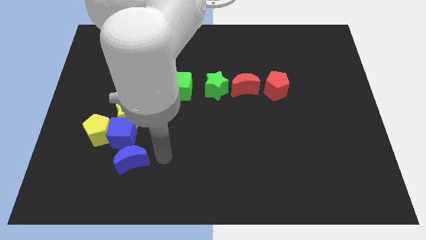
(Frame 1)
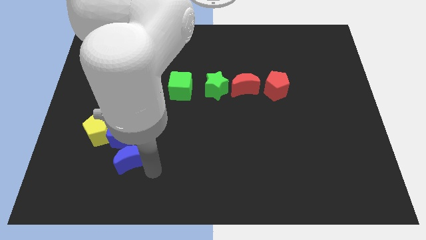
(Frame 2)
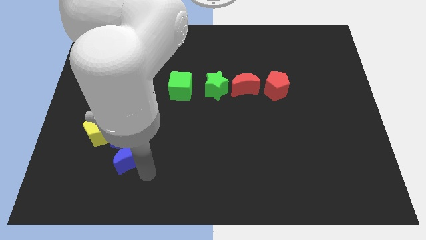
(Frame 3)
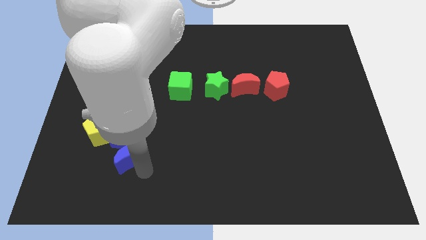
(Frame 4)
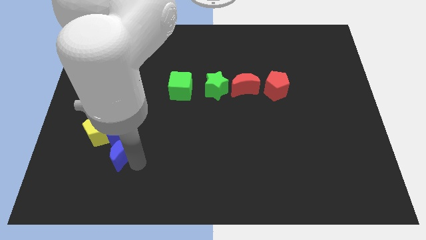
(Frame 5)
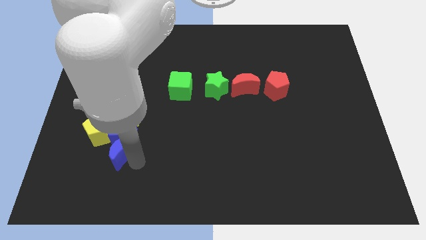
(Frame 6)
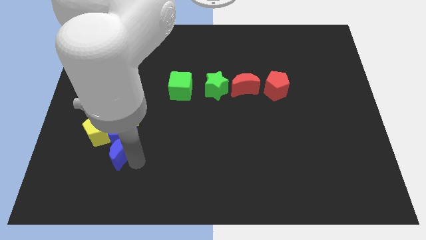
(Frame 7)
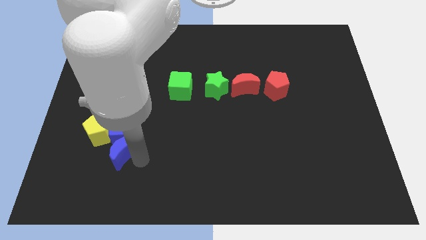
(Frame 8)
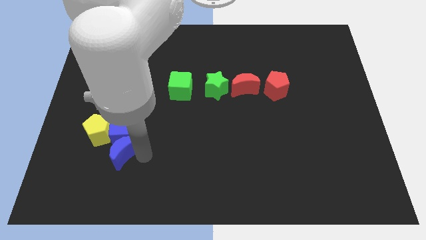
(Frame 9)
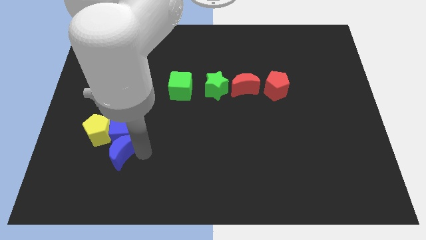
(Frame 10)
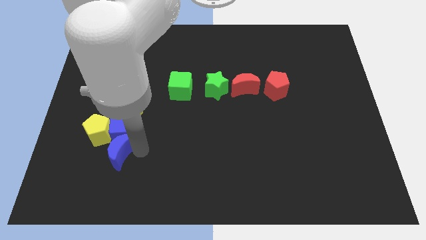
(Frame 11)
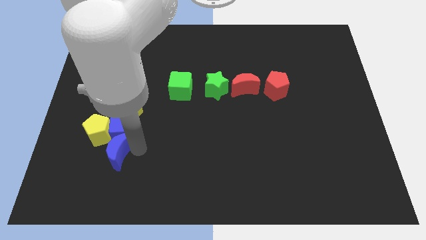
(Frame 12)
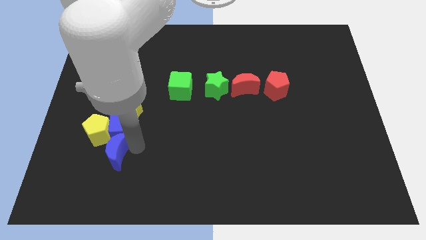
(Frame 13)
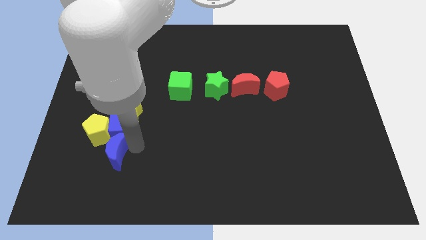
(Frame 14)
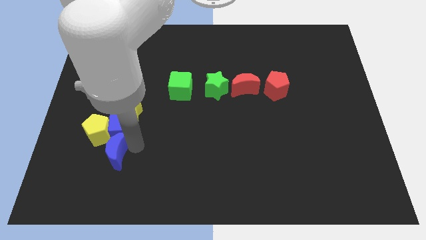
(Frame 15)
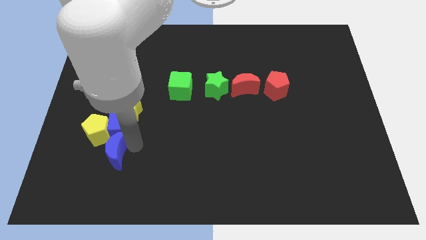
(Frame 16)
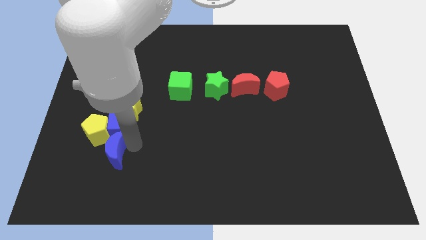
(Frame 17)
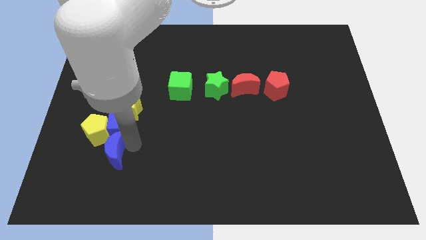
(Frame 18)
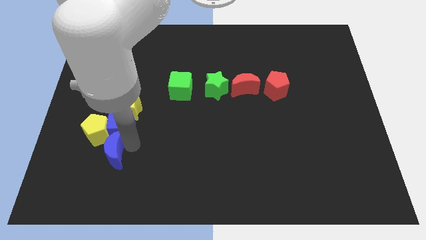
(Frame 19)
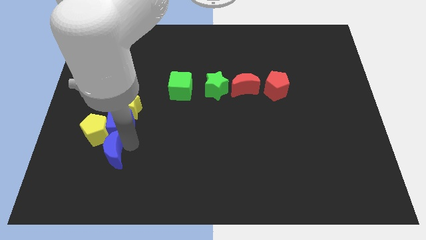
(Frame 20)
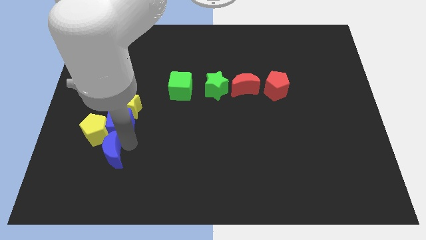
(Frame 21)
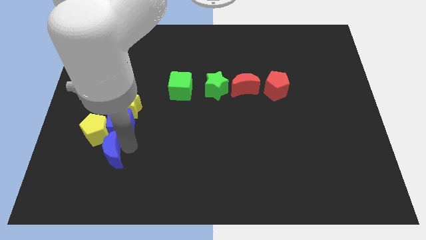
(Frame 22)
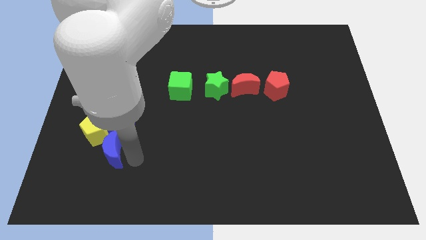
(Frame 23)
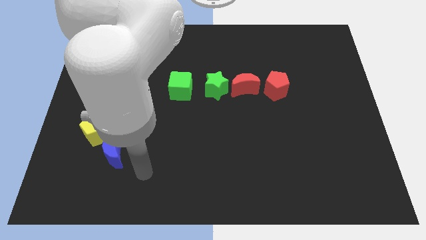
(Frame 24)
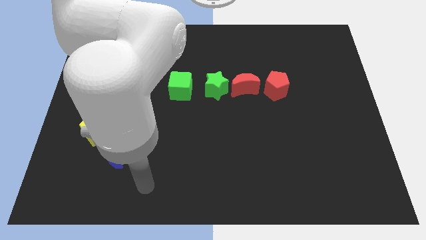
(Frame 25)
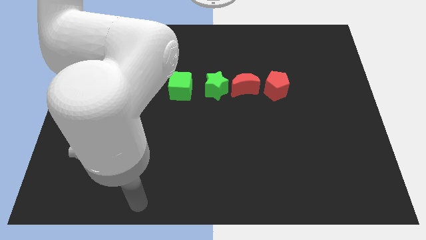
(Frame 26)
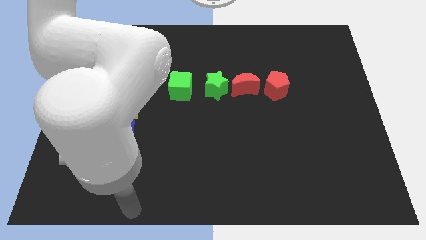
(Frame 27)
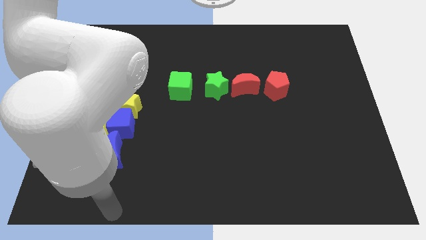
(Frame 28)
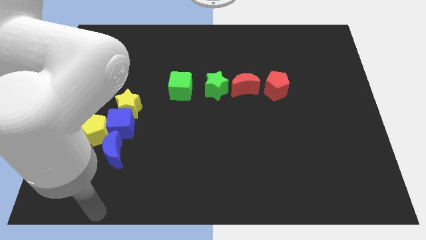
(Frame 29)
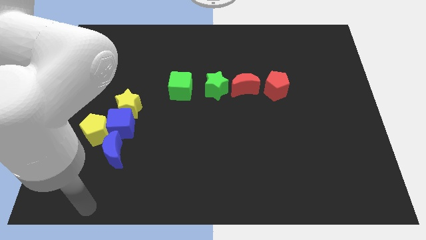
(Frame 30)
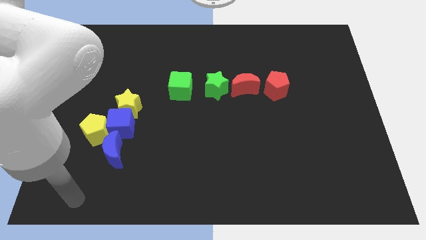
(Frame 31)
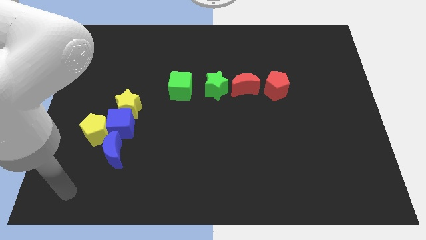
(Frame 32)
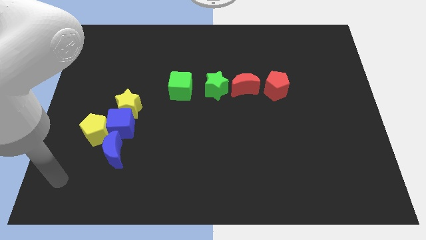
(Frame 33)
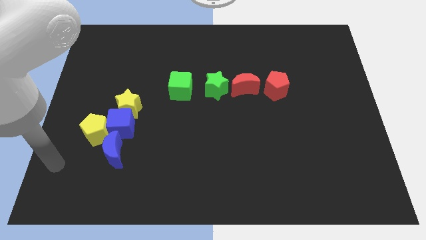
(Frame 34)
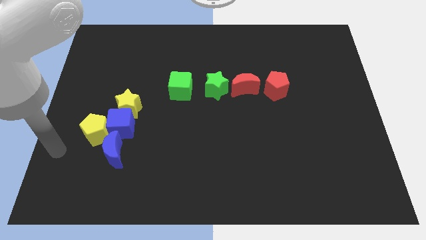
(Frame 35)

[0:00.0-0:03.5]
adjust the blue moon vertically below the blue cube

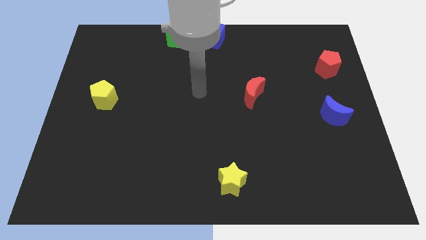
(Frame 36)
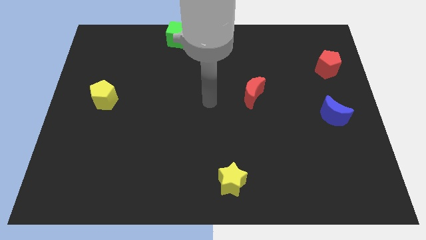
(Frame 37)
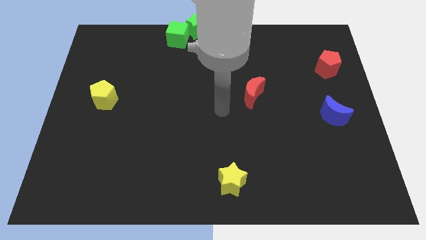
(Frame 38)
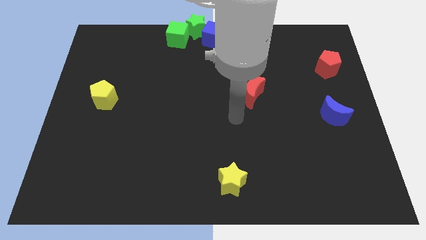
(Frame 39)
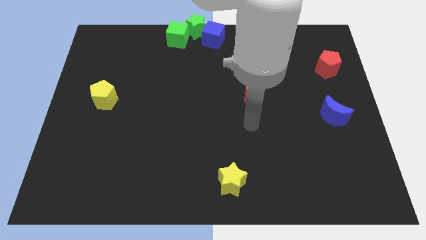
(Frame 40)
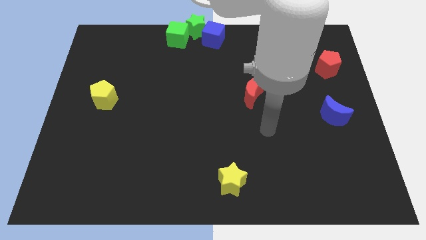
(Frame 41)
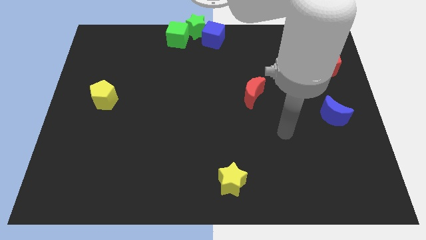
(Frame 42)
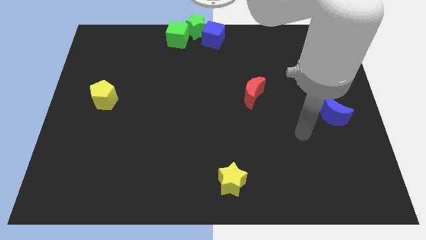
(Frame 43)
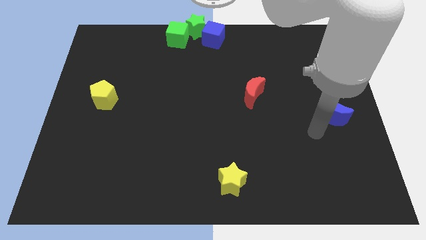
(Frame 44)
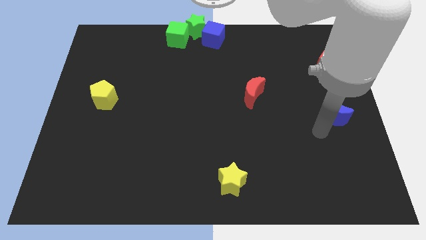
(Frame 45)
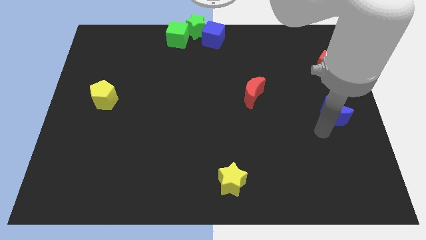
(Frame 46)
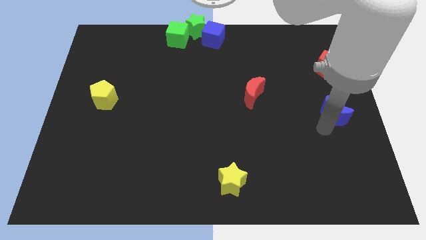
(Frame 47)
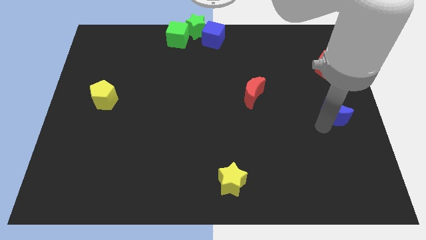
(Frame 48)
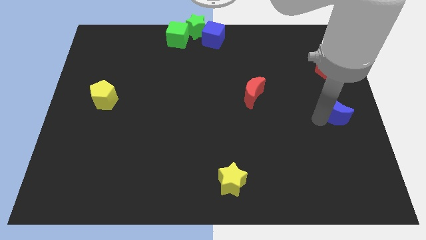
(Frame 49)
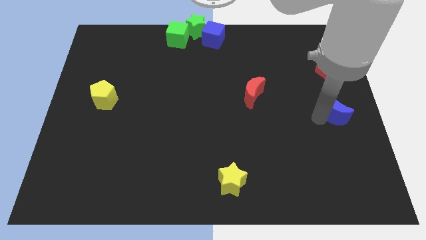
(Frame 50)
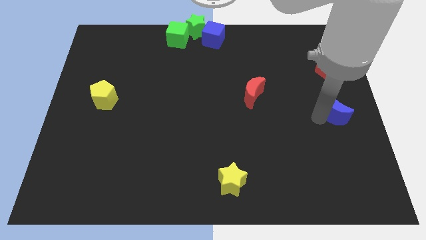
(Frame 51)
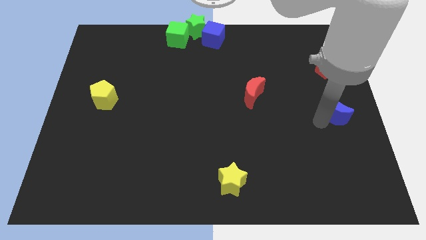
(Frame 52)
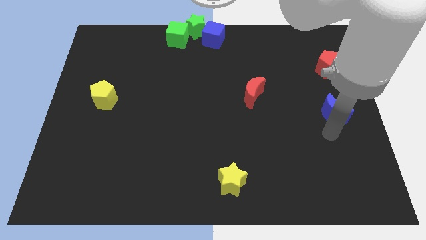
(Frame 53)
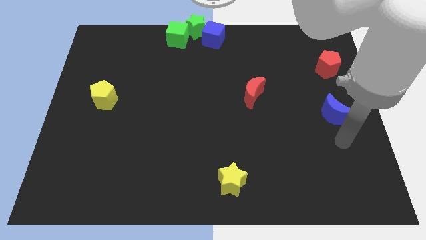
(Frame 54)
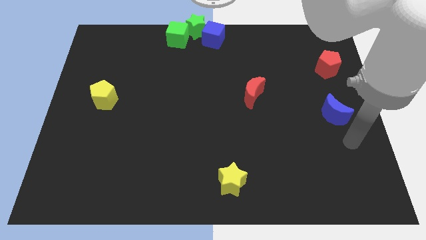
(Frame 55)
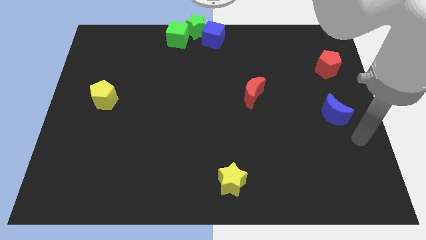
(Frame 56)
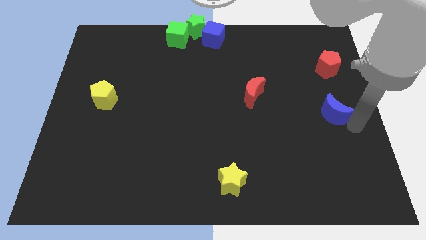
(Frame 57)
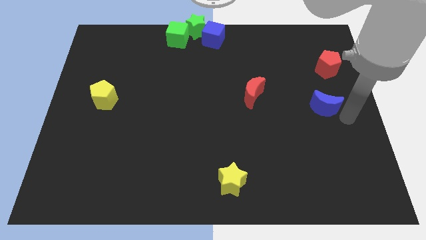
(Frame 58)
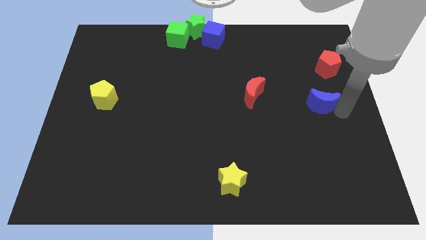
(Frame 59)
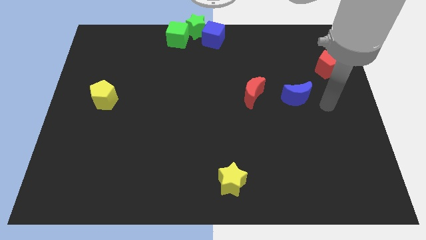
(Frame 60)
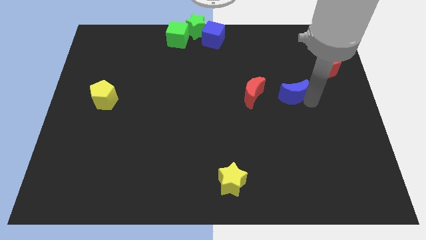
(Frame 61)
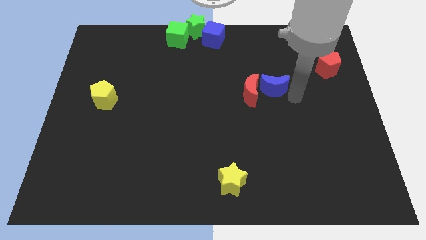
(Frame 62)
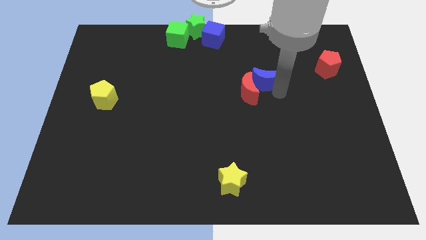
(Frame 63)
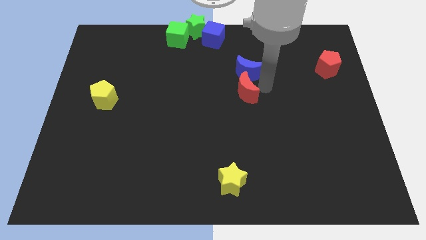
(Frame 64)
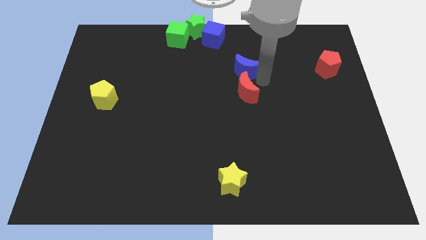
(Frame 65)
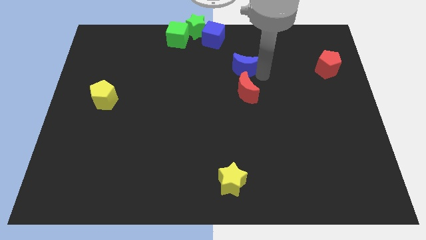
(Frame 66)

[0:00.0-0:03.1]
place the blue crescent to the top side of the red crescent

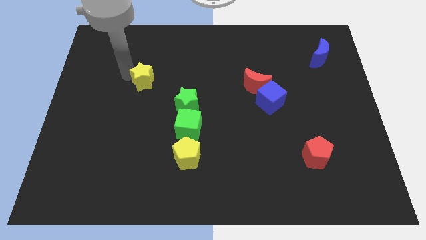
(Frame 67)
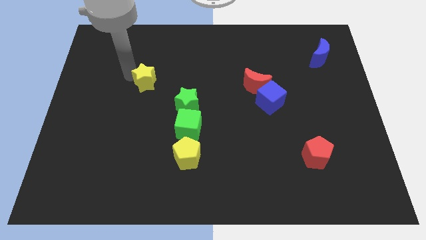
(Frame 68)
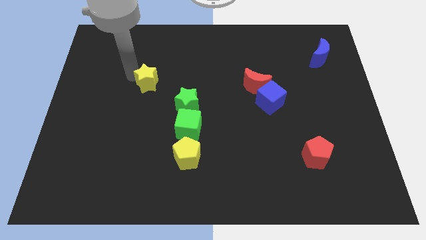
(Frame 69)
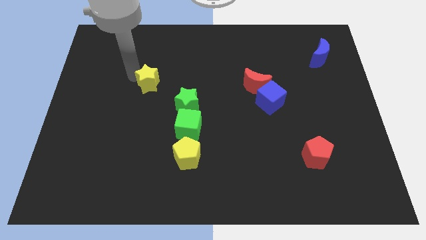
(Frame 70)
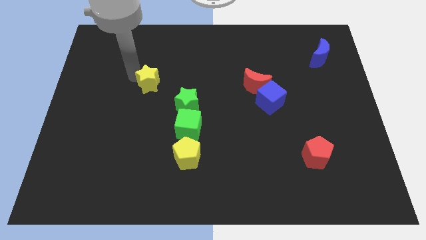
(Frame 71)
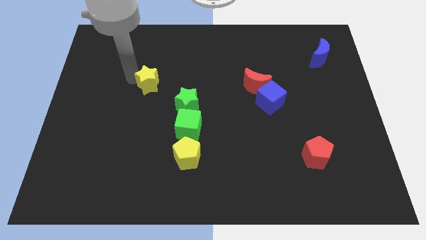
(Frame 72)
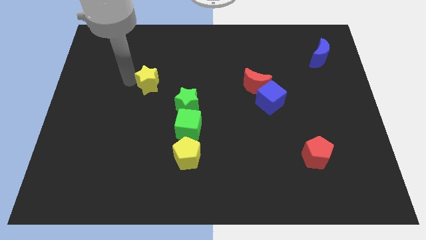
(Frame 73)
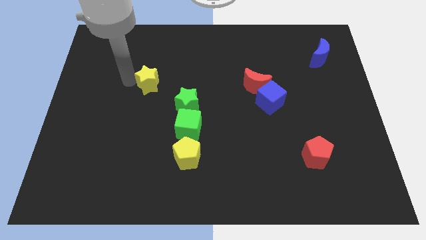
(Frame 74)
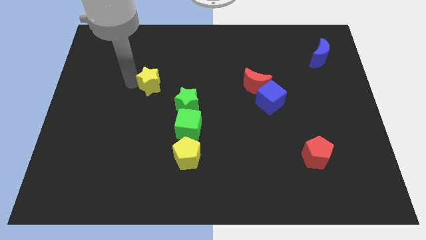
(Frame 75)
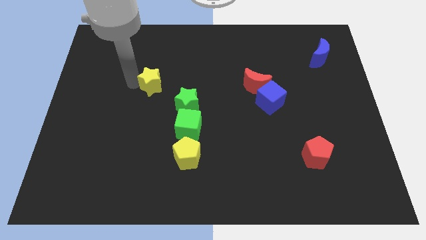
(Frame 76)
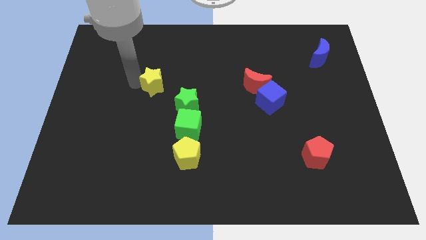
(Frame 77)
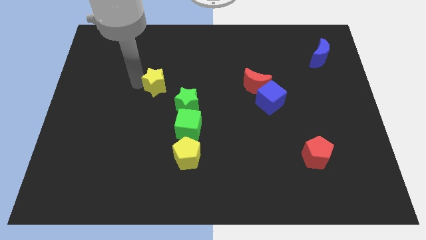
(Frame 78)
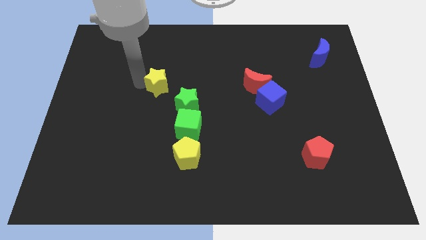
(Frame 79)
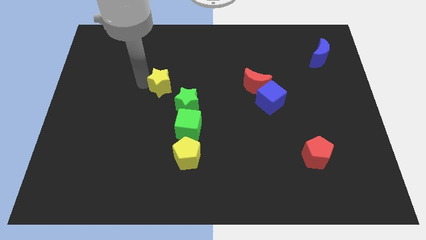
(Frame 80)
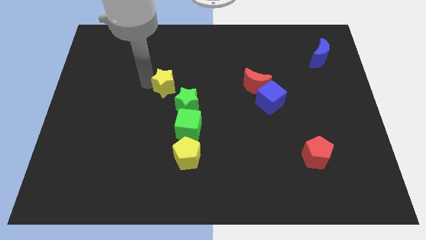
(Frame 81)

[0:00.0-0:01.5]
move yellow star left above the green star

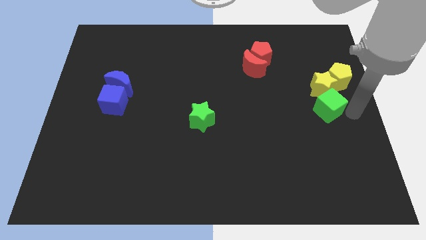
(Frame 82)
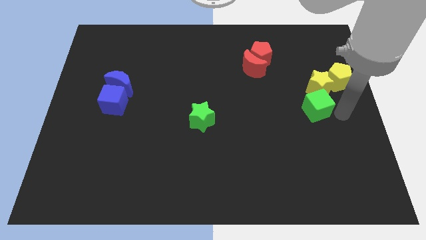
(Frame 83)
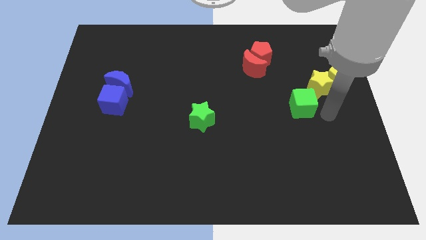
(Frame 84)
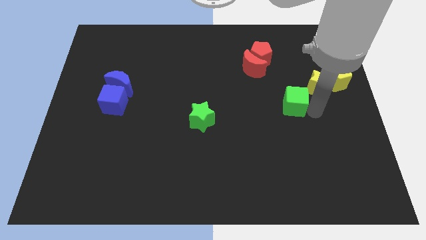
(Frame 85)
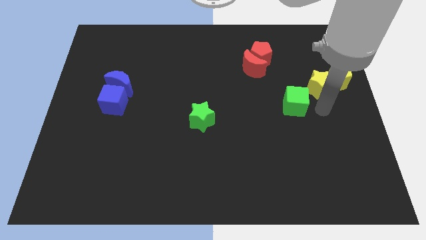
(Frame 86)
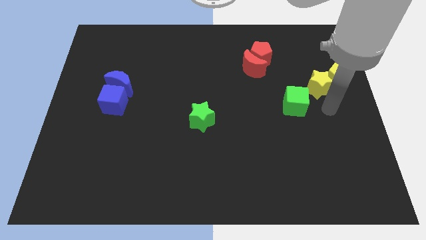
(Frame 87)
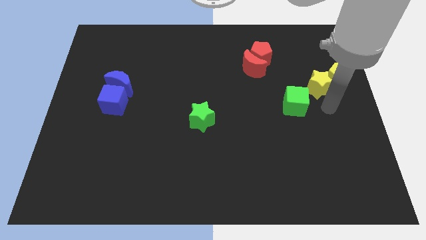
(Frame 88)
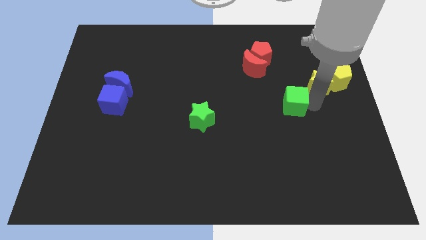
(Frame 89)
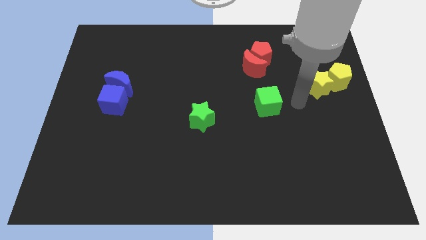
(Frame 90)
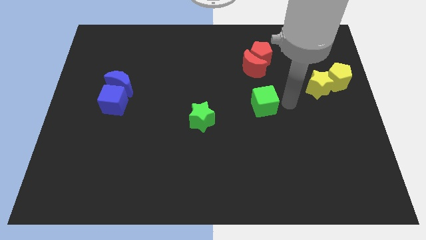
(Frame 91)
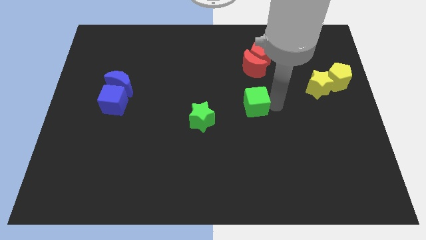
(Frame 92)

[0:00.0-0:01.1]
push green cube below red crescent
